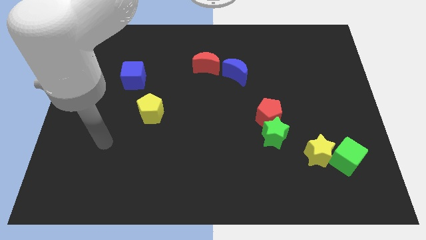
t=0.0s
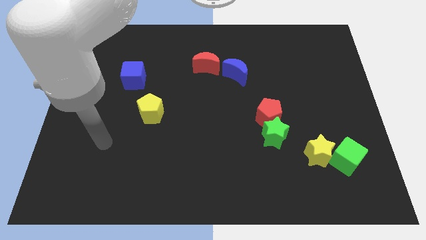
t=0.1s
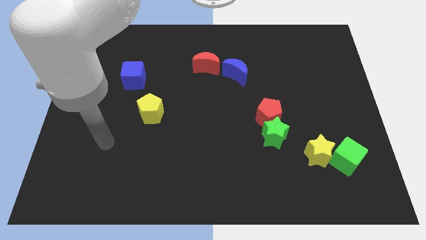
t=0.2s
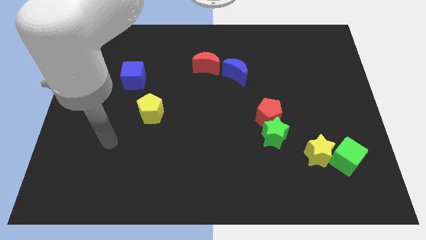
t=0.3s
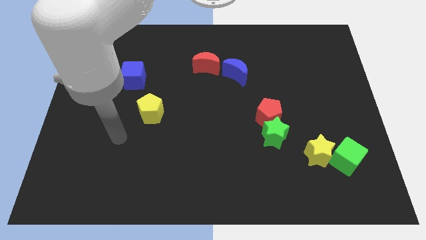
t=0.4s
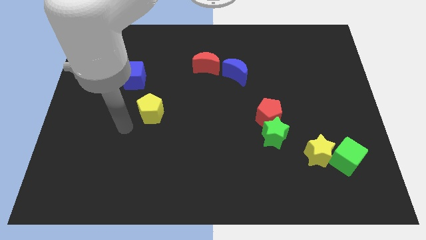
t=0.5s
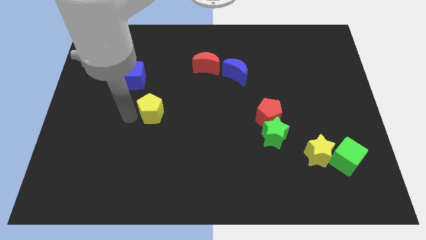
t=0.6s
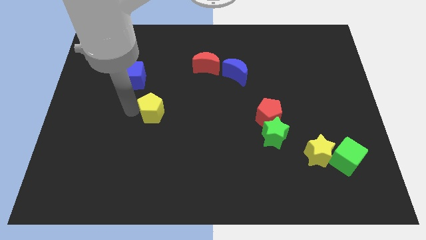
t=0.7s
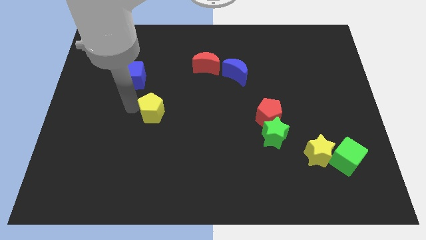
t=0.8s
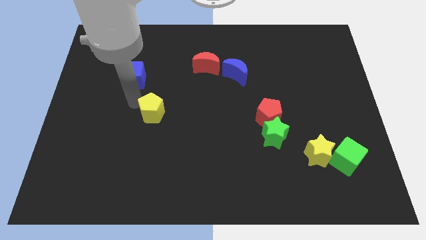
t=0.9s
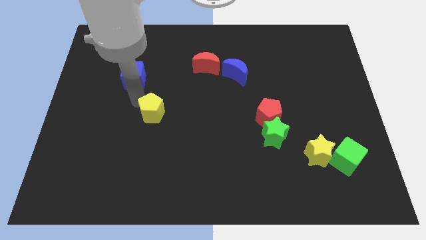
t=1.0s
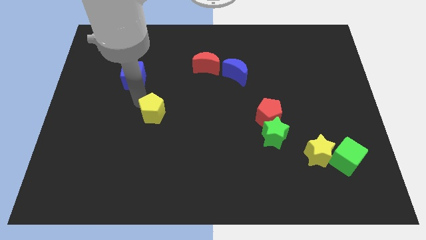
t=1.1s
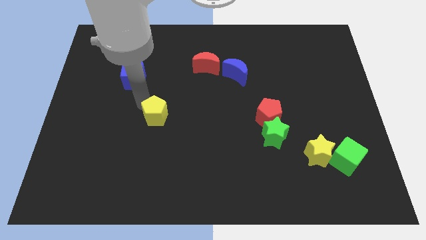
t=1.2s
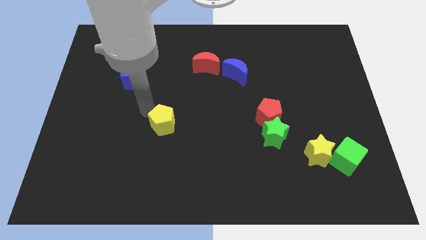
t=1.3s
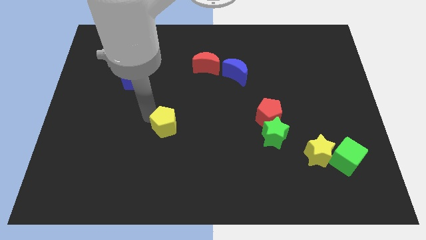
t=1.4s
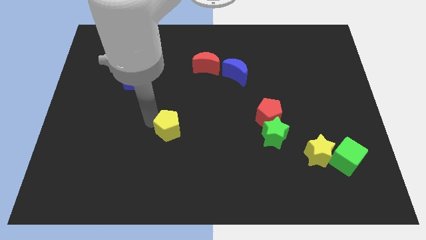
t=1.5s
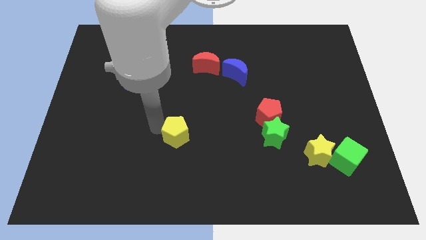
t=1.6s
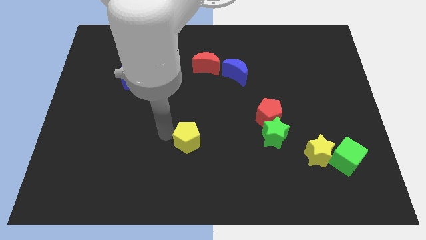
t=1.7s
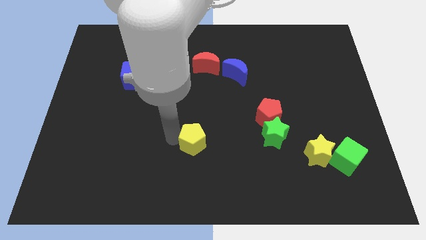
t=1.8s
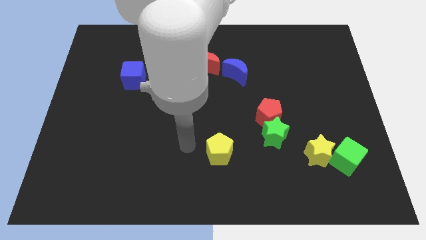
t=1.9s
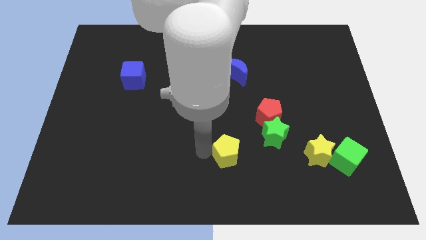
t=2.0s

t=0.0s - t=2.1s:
place the yellow pentagon vertically below the blue crescent

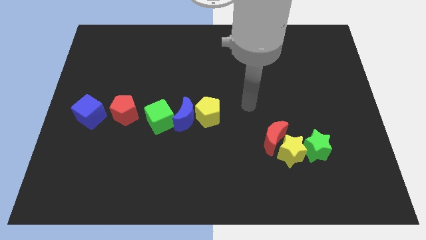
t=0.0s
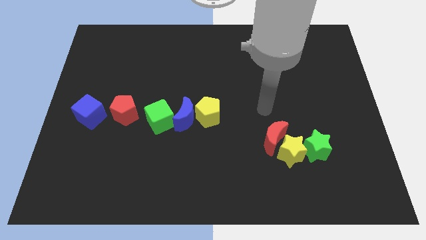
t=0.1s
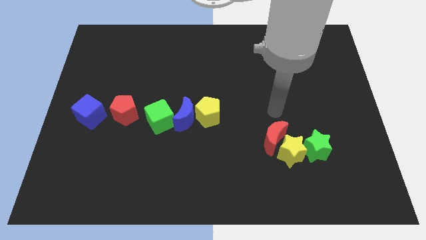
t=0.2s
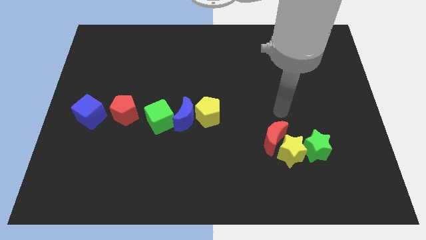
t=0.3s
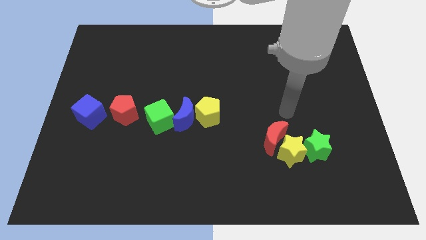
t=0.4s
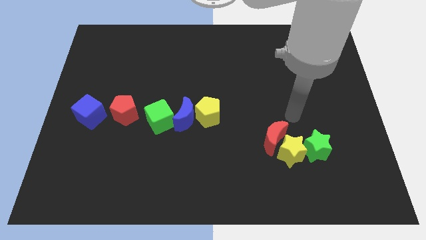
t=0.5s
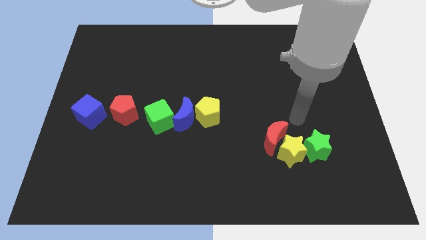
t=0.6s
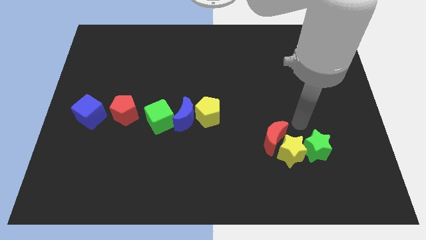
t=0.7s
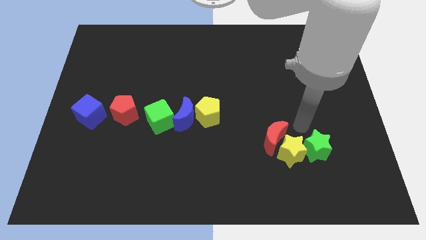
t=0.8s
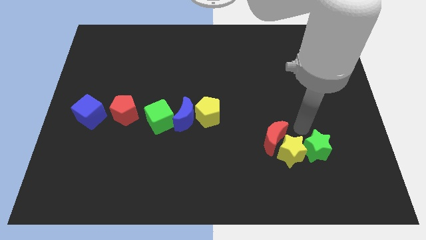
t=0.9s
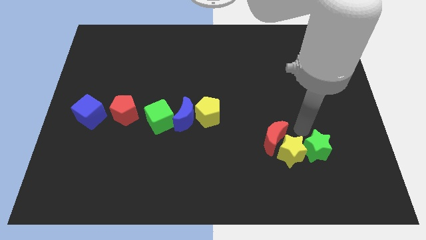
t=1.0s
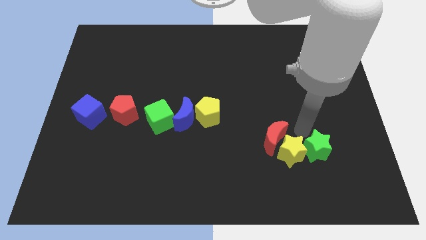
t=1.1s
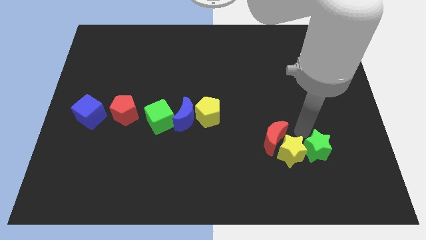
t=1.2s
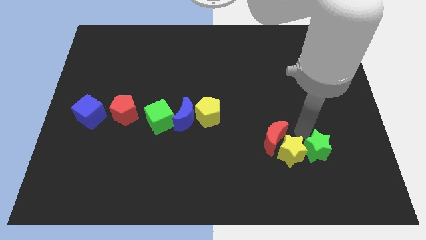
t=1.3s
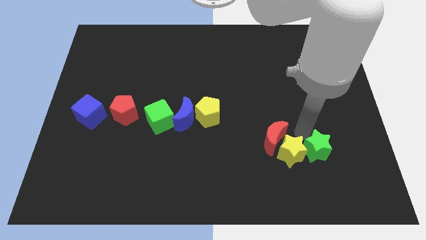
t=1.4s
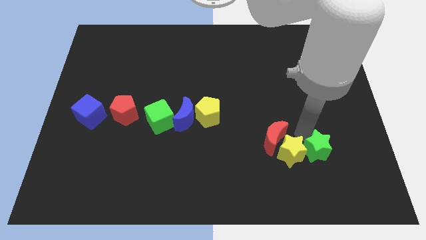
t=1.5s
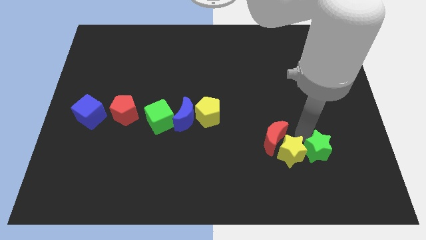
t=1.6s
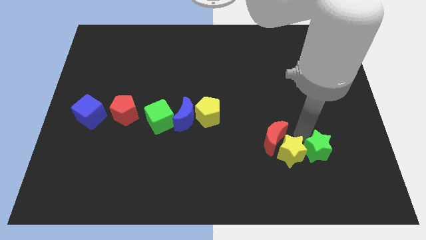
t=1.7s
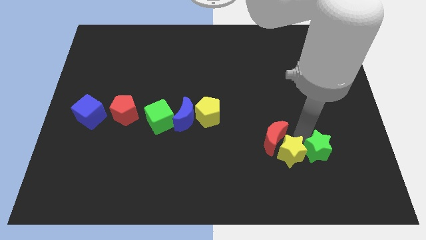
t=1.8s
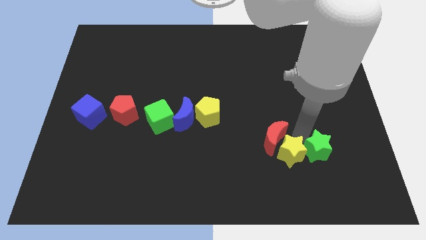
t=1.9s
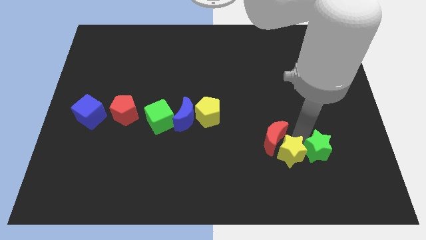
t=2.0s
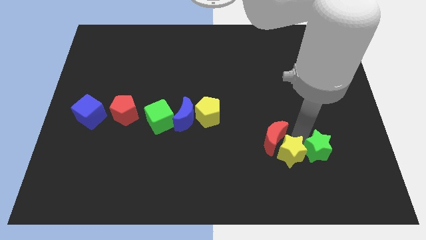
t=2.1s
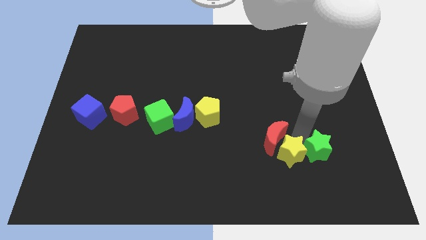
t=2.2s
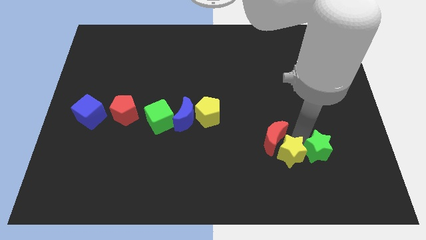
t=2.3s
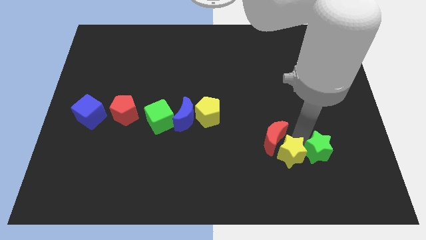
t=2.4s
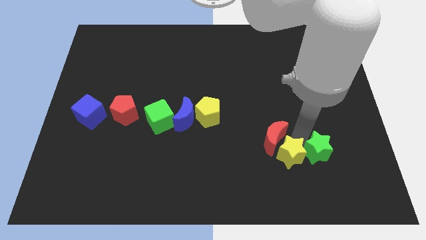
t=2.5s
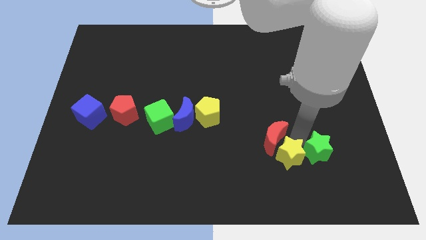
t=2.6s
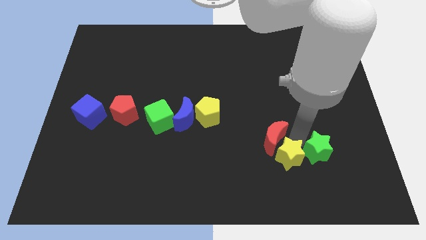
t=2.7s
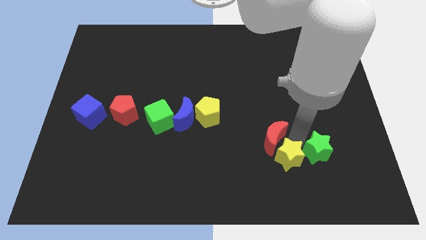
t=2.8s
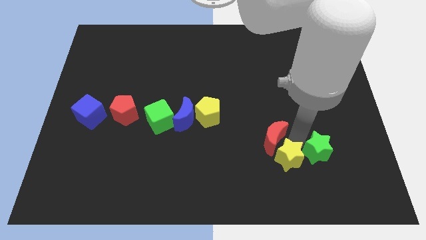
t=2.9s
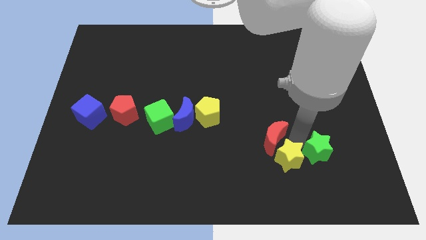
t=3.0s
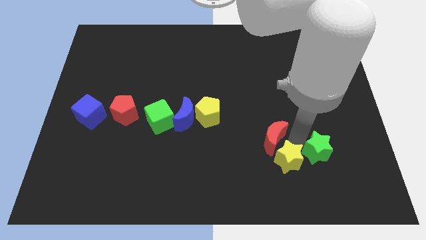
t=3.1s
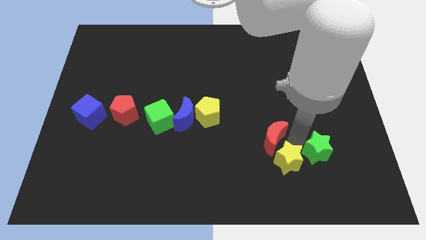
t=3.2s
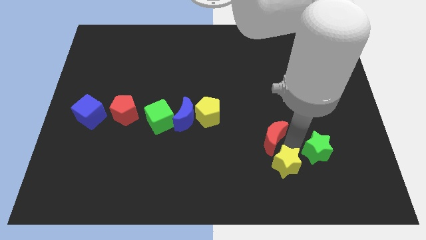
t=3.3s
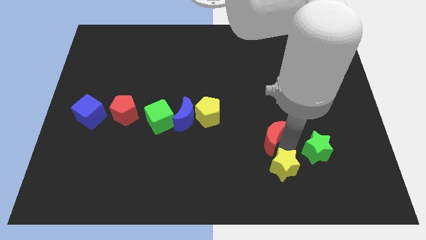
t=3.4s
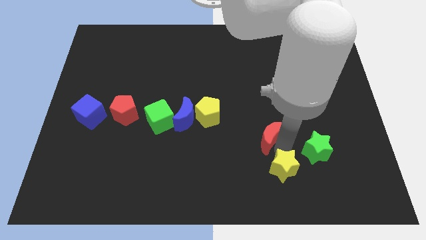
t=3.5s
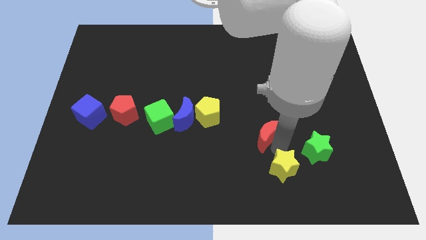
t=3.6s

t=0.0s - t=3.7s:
separate yellow star from green star and red moon

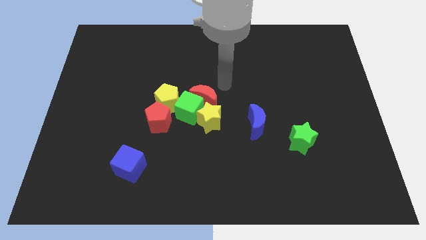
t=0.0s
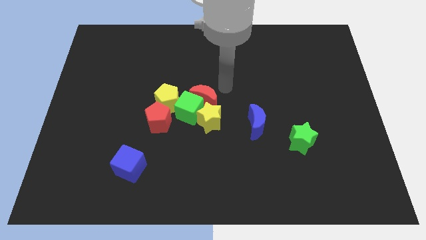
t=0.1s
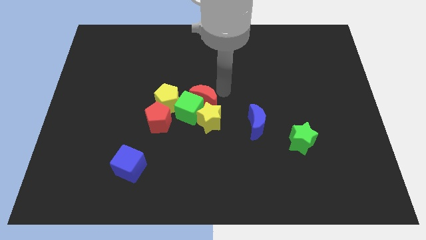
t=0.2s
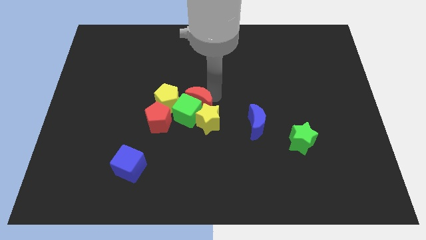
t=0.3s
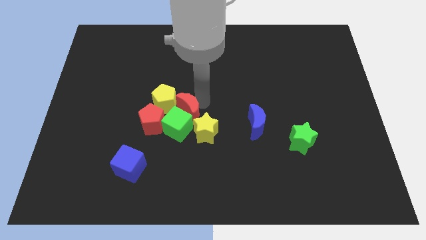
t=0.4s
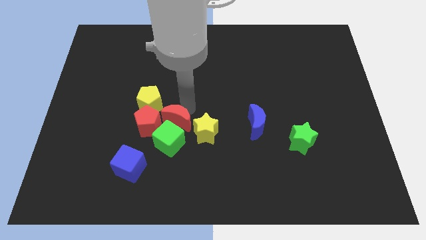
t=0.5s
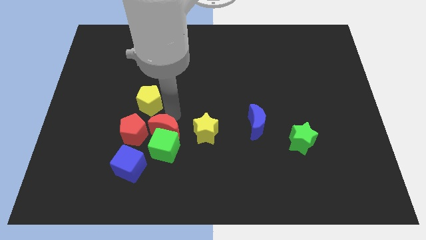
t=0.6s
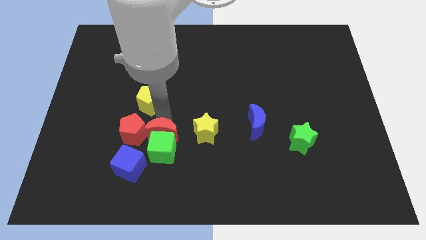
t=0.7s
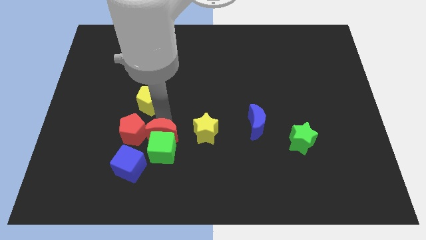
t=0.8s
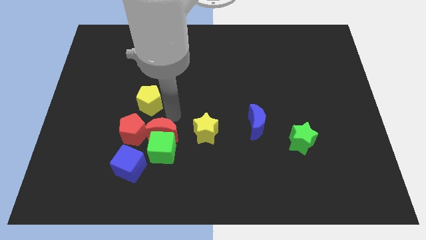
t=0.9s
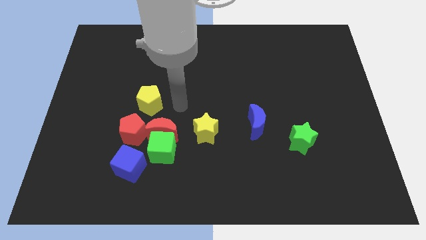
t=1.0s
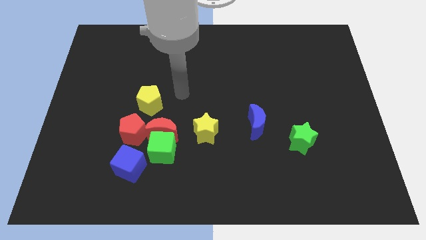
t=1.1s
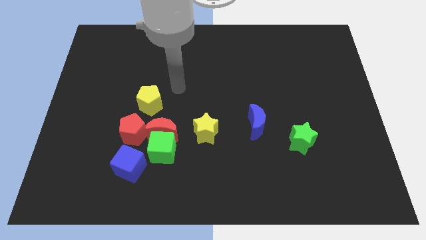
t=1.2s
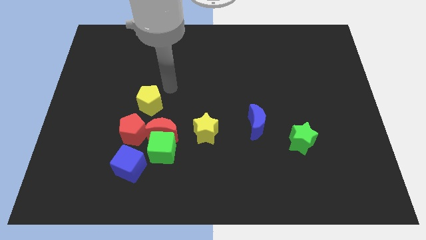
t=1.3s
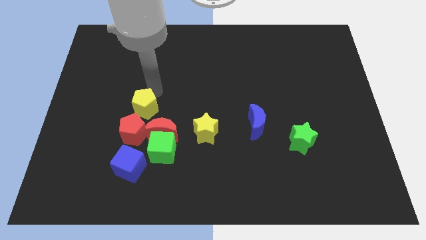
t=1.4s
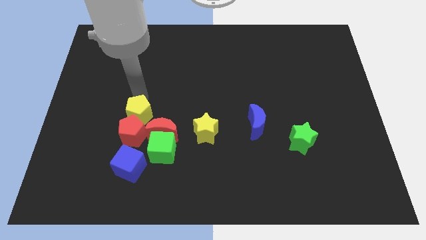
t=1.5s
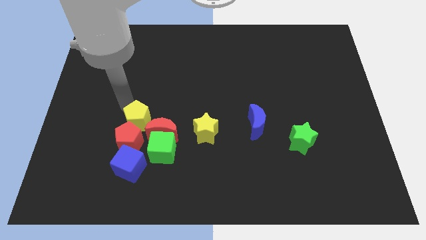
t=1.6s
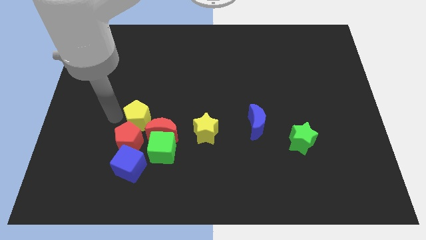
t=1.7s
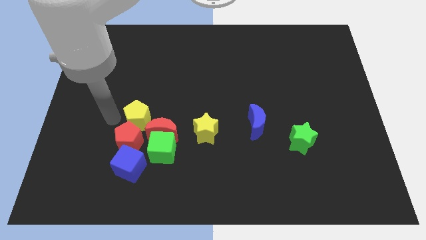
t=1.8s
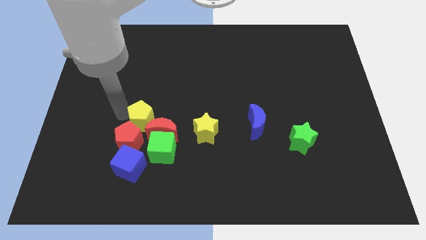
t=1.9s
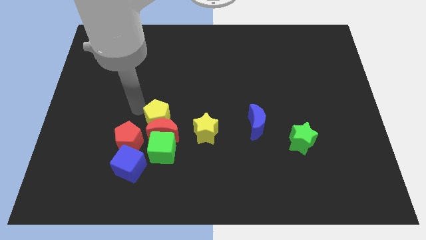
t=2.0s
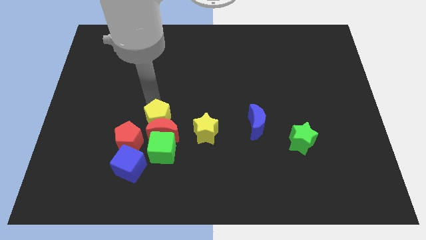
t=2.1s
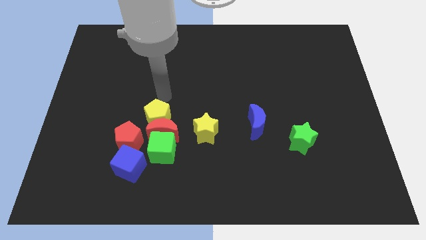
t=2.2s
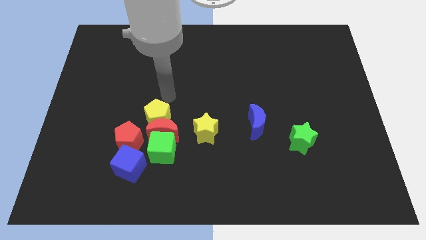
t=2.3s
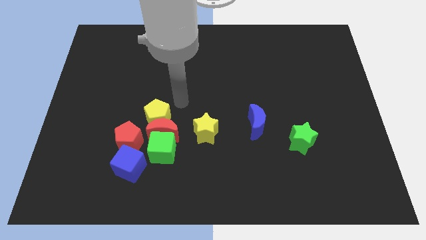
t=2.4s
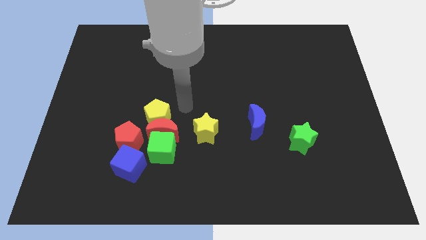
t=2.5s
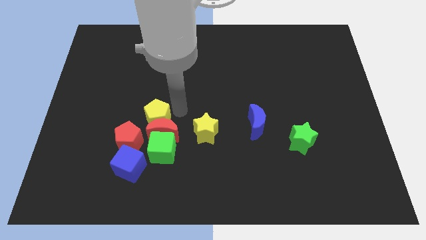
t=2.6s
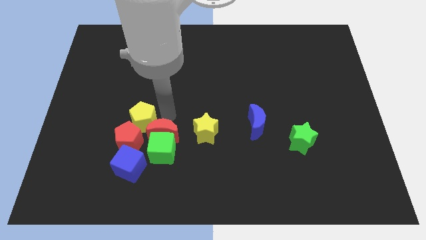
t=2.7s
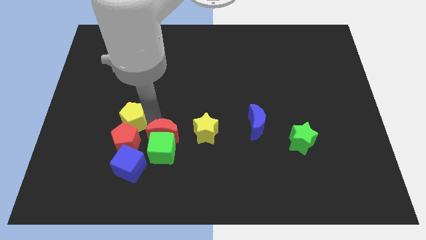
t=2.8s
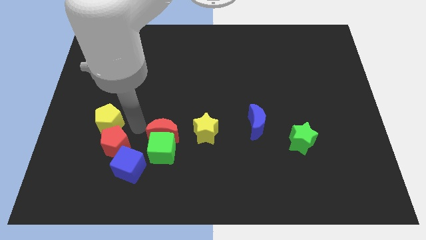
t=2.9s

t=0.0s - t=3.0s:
move the yellow pentagon towards left

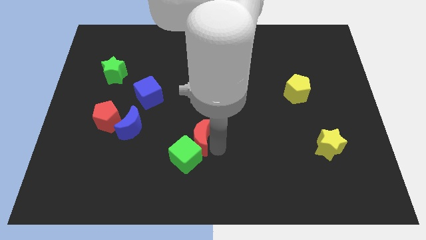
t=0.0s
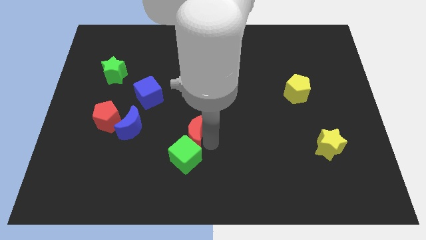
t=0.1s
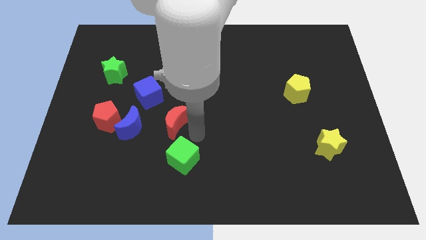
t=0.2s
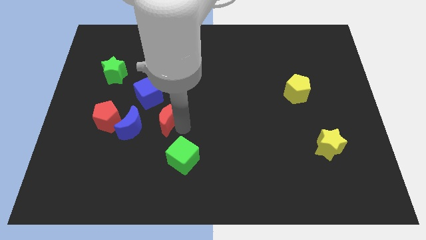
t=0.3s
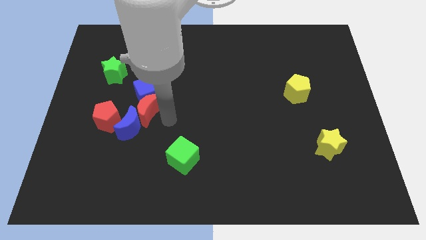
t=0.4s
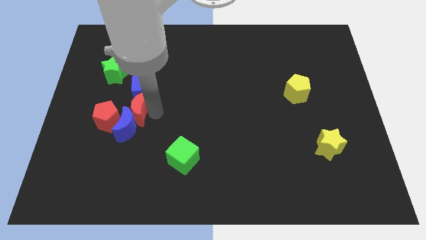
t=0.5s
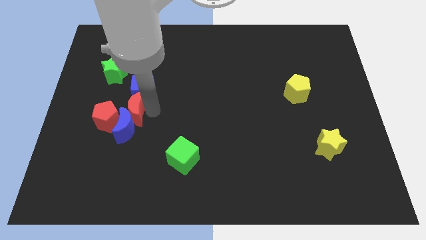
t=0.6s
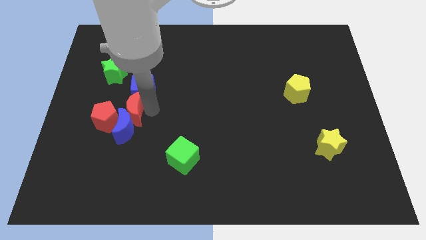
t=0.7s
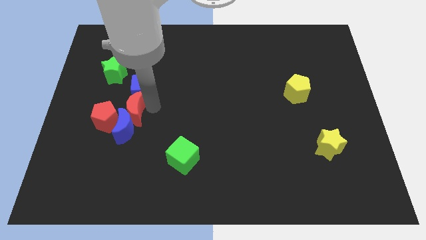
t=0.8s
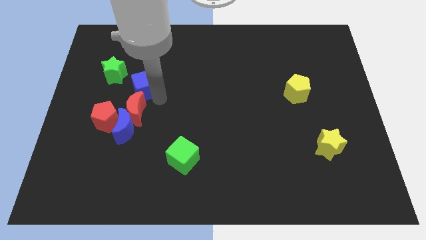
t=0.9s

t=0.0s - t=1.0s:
drag the red moon between the blue blocks
